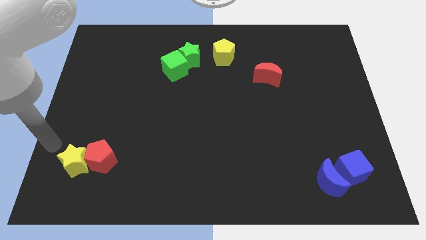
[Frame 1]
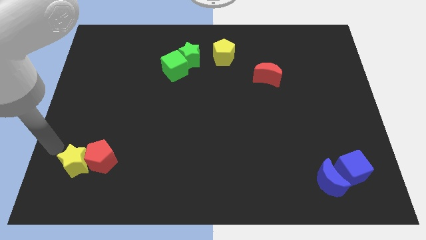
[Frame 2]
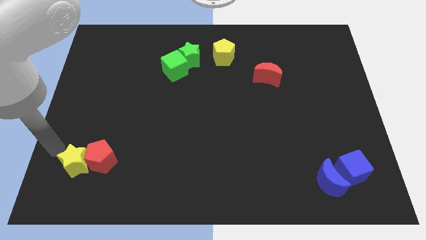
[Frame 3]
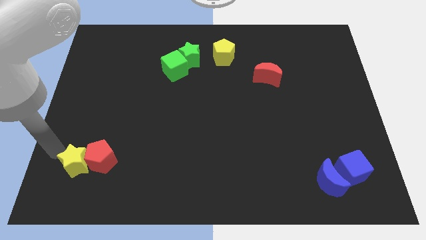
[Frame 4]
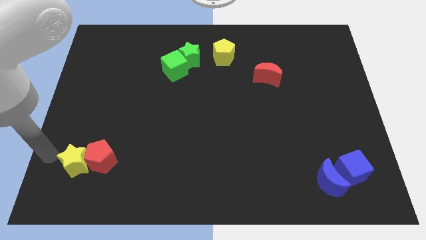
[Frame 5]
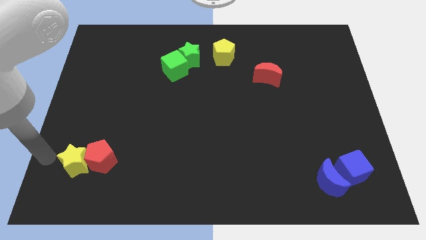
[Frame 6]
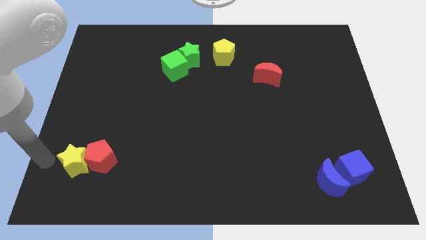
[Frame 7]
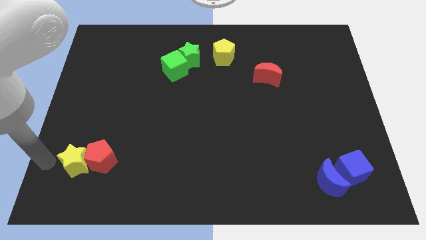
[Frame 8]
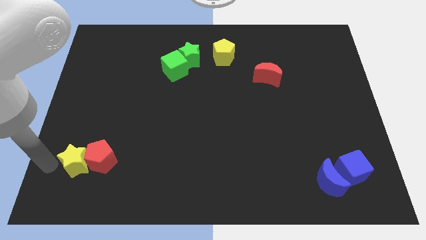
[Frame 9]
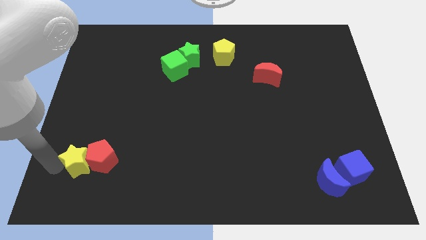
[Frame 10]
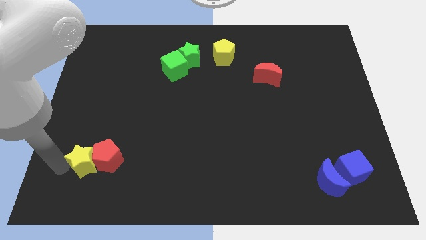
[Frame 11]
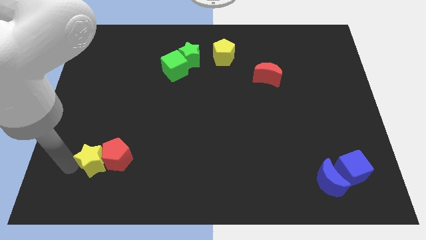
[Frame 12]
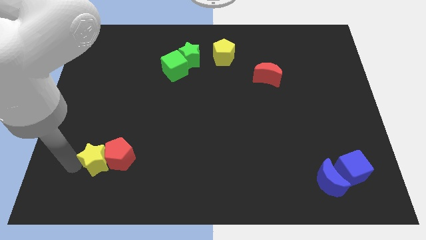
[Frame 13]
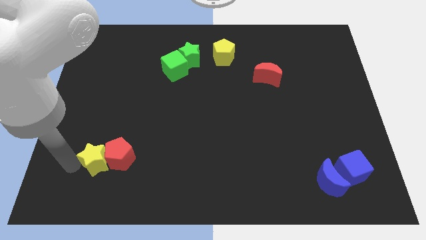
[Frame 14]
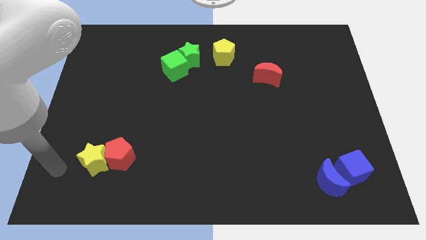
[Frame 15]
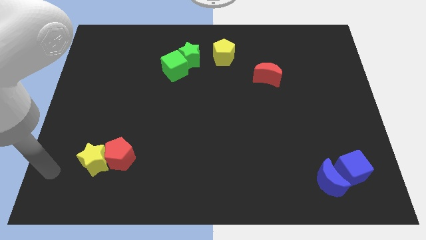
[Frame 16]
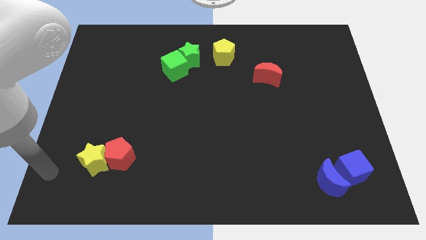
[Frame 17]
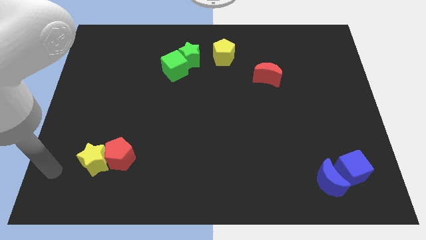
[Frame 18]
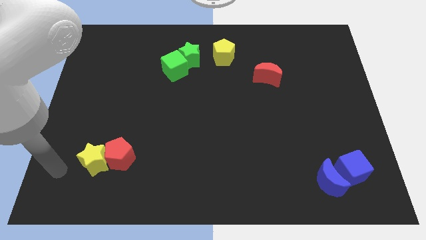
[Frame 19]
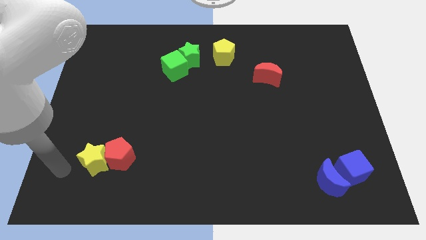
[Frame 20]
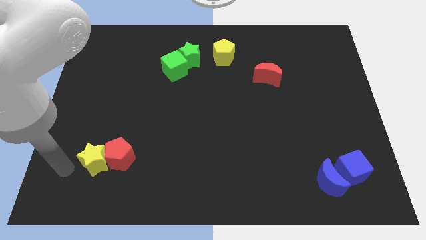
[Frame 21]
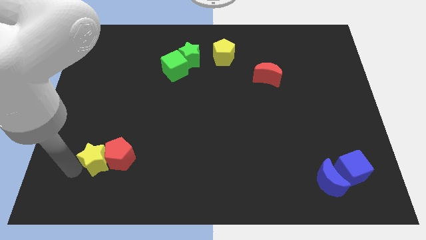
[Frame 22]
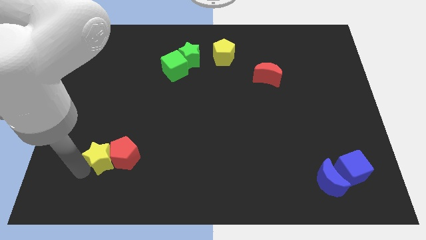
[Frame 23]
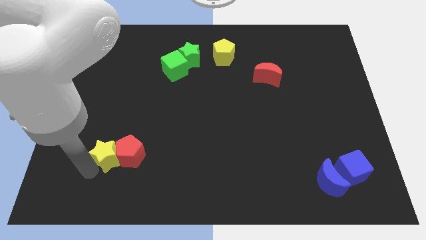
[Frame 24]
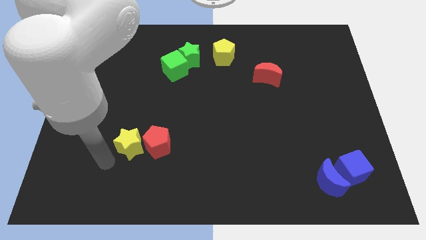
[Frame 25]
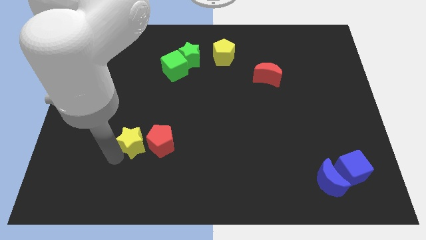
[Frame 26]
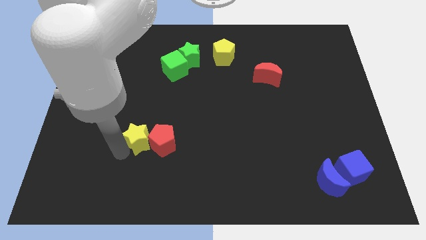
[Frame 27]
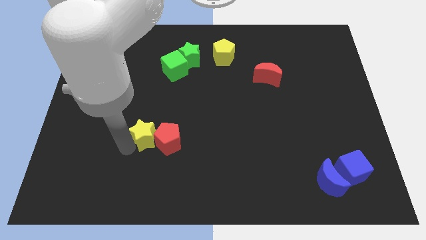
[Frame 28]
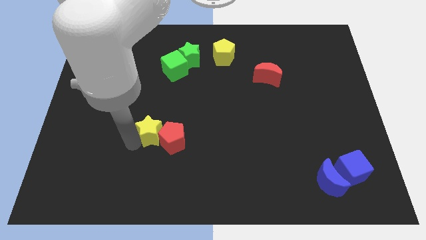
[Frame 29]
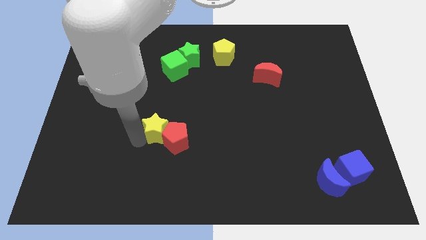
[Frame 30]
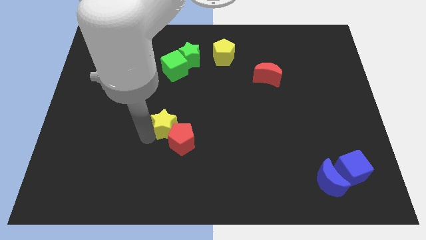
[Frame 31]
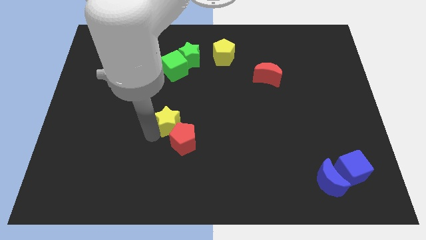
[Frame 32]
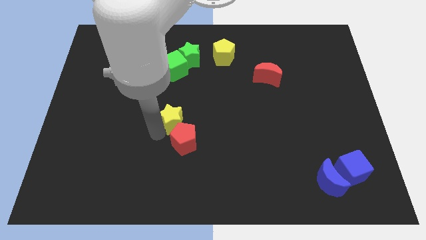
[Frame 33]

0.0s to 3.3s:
push the yellow star and red pentagon towards the center of the board

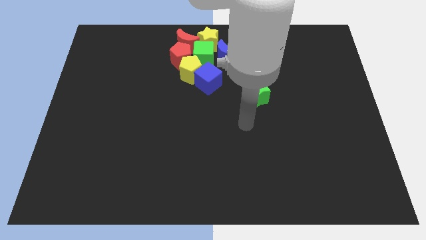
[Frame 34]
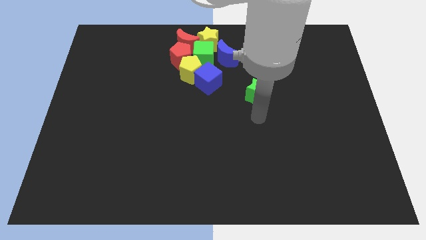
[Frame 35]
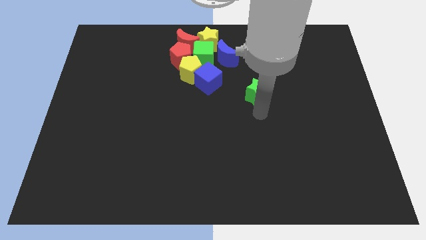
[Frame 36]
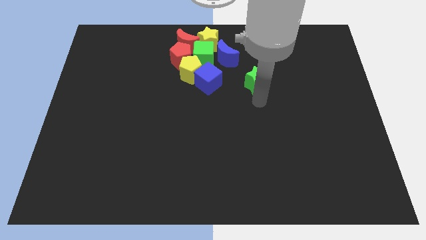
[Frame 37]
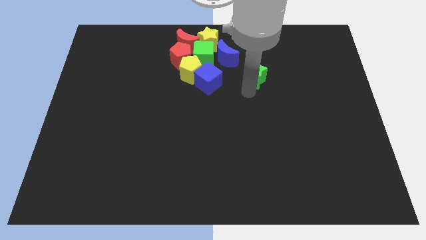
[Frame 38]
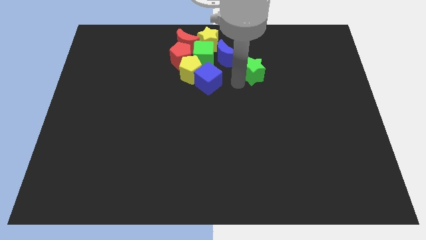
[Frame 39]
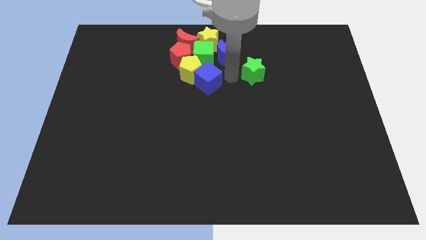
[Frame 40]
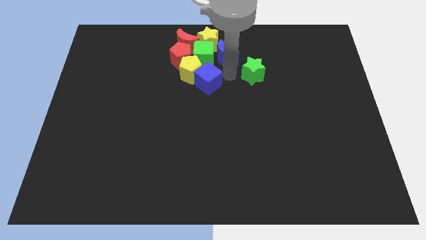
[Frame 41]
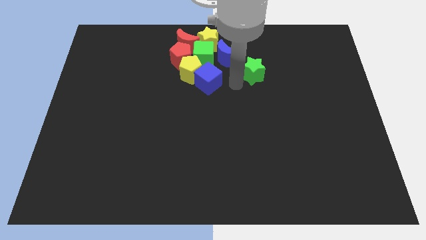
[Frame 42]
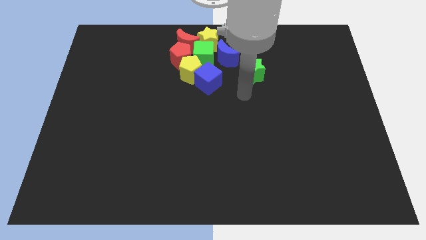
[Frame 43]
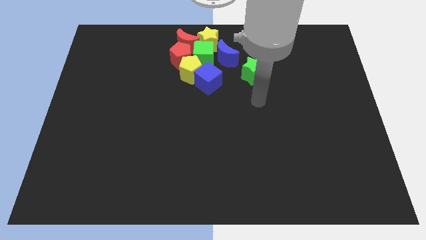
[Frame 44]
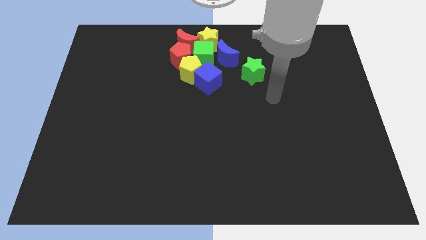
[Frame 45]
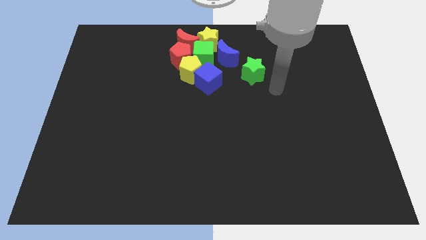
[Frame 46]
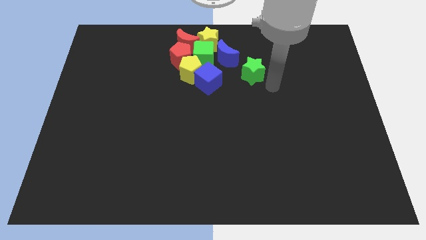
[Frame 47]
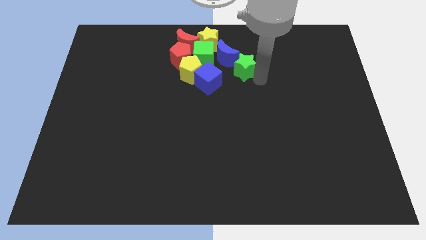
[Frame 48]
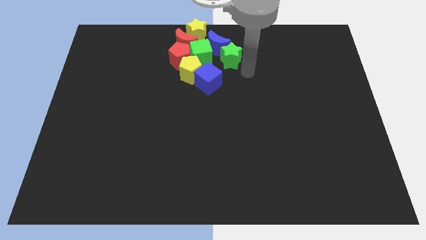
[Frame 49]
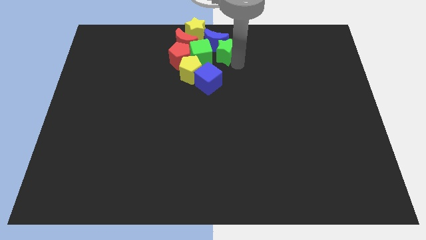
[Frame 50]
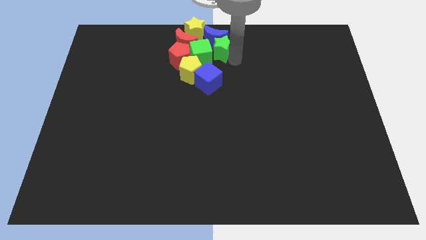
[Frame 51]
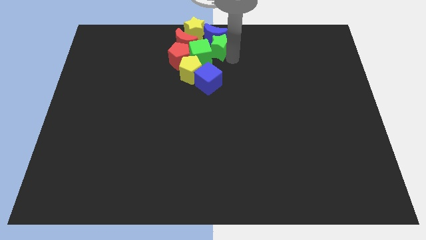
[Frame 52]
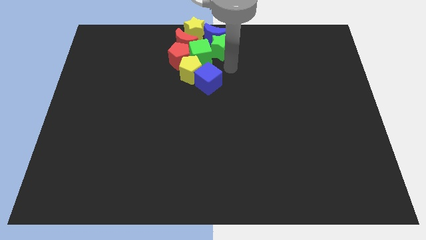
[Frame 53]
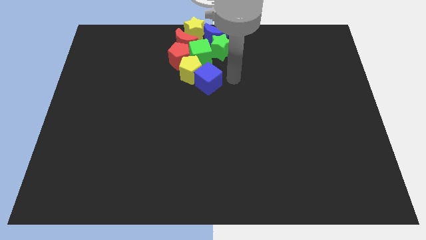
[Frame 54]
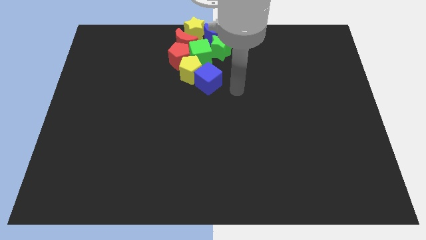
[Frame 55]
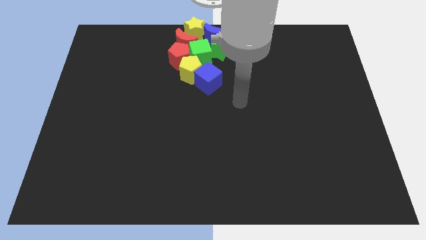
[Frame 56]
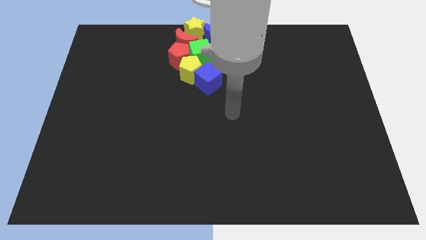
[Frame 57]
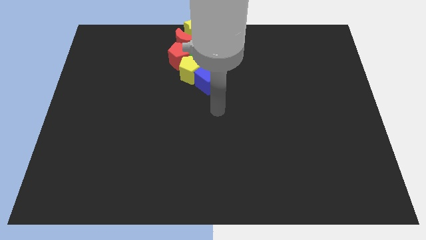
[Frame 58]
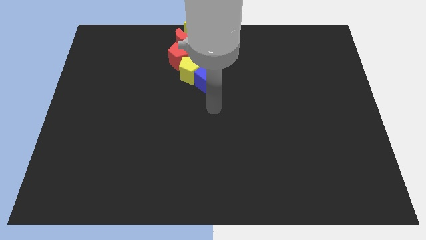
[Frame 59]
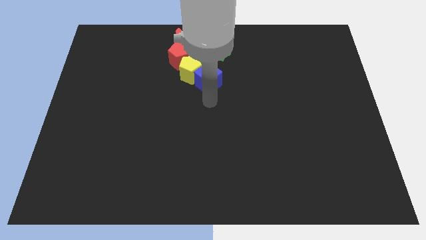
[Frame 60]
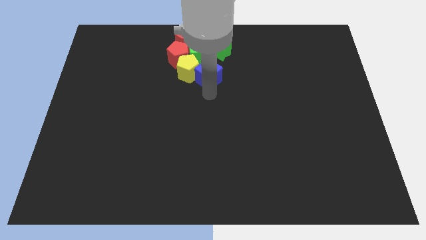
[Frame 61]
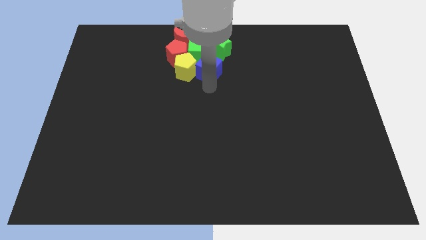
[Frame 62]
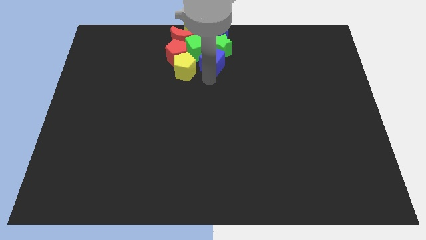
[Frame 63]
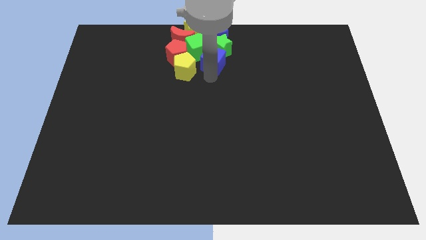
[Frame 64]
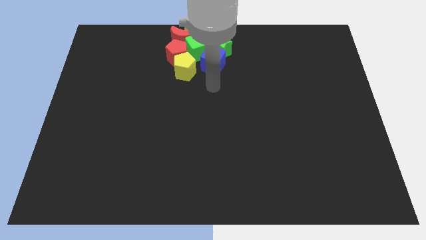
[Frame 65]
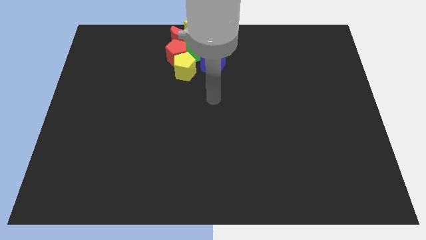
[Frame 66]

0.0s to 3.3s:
push the green star into the blue crescent

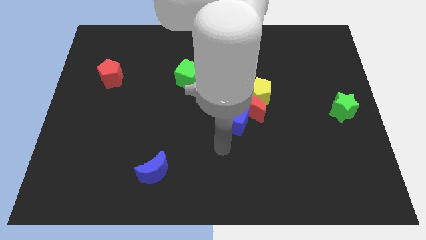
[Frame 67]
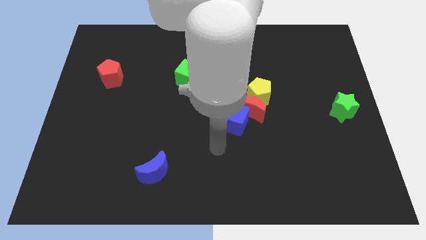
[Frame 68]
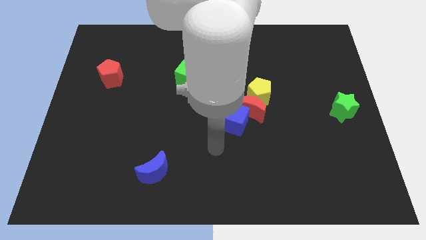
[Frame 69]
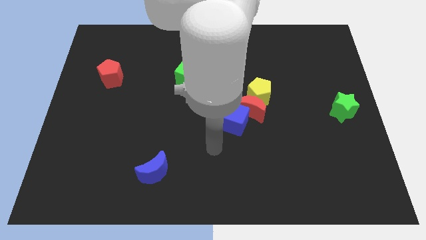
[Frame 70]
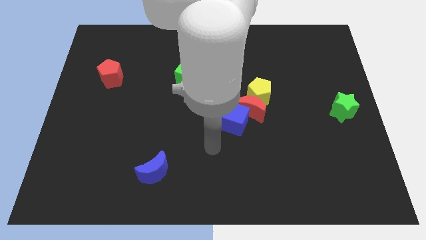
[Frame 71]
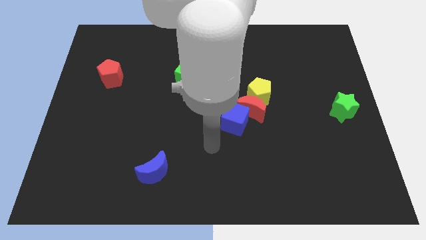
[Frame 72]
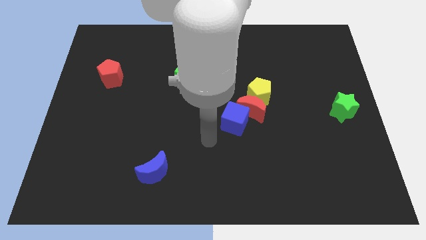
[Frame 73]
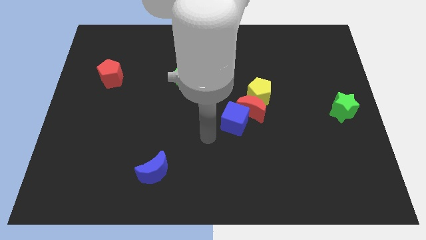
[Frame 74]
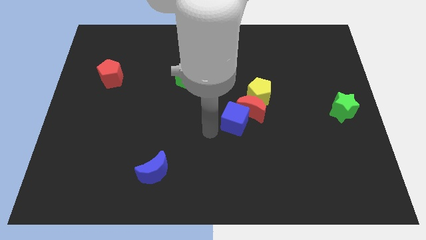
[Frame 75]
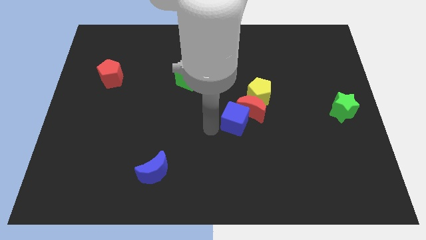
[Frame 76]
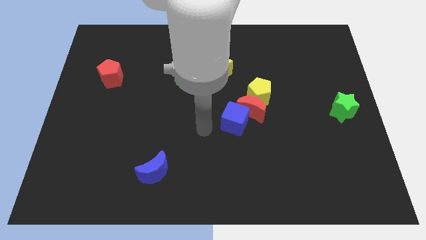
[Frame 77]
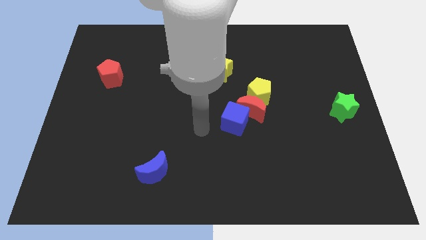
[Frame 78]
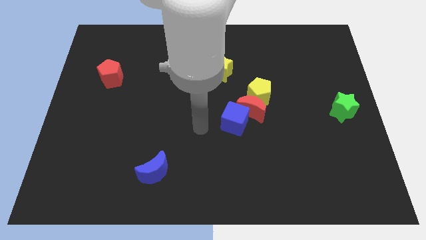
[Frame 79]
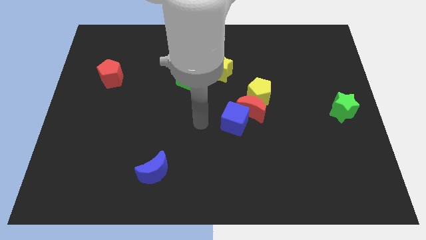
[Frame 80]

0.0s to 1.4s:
point your hand at the left side of the blue cube

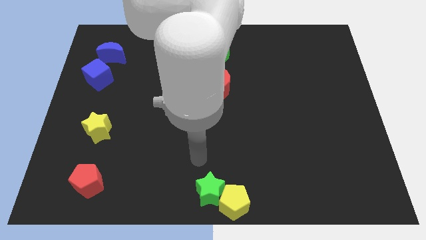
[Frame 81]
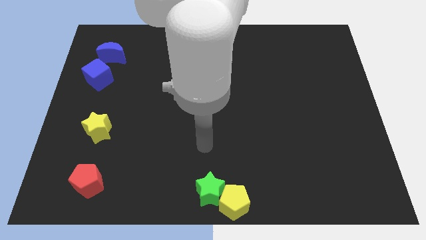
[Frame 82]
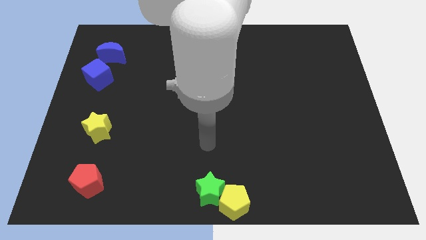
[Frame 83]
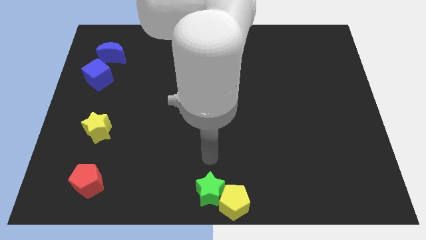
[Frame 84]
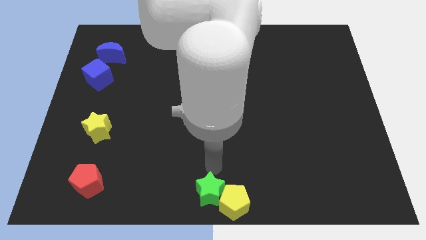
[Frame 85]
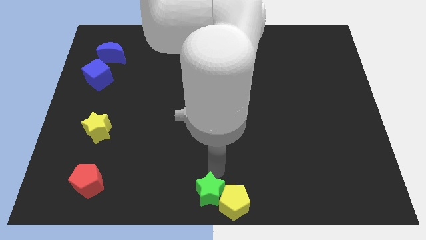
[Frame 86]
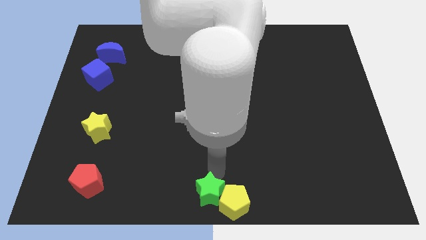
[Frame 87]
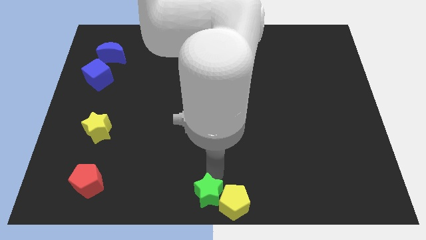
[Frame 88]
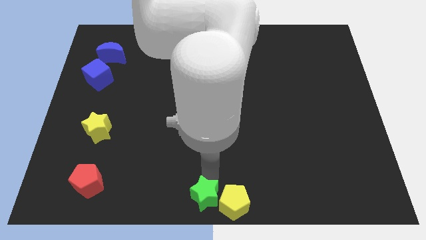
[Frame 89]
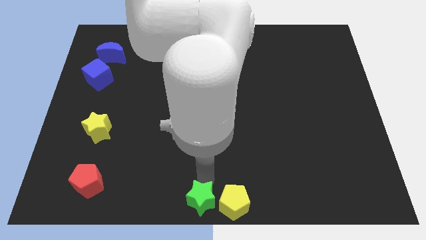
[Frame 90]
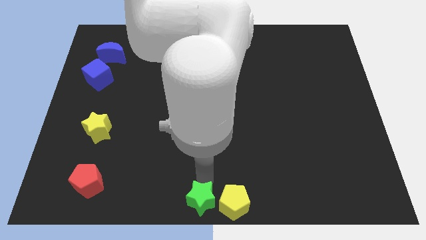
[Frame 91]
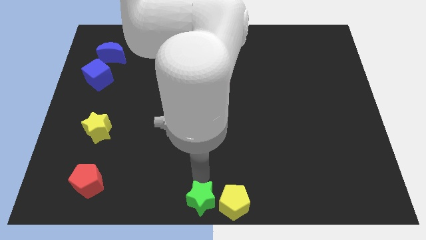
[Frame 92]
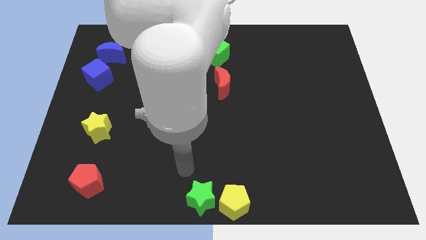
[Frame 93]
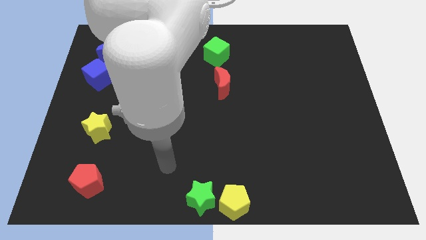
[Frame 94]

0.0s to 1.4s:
push yellow pentagon and green star towards the bottom center of the board
